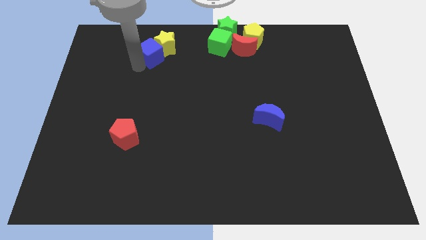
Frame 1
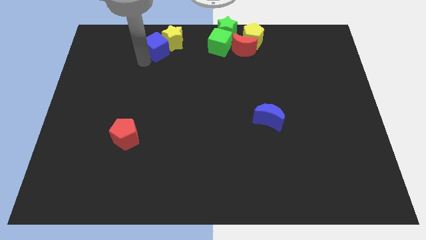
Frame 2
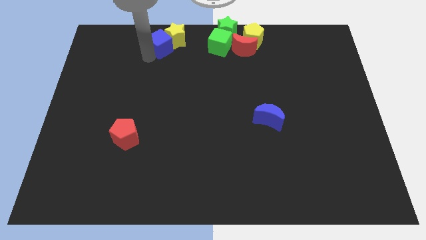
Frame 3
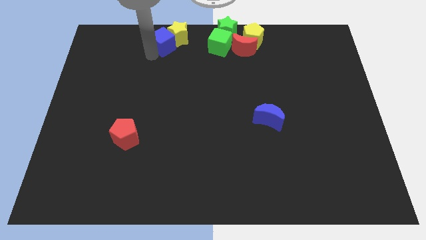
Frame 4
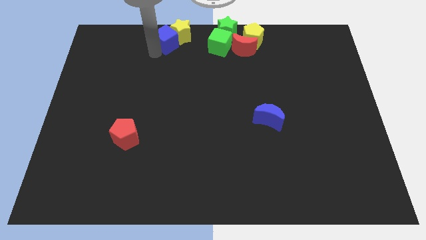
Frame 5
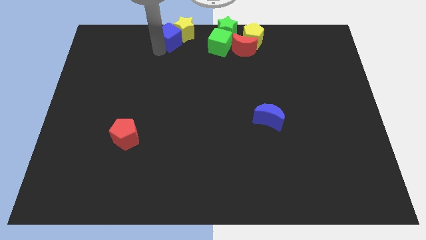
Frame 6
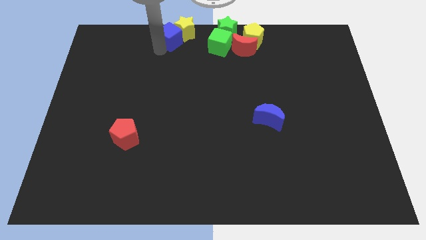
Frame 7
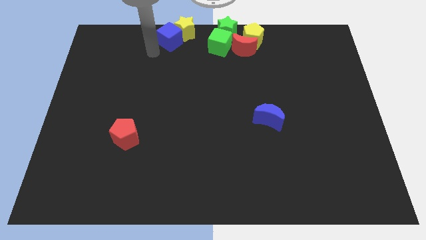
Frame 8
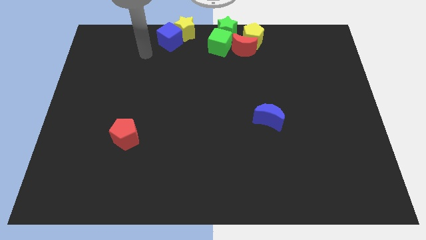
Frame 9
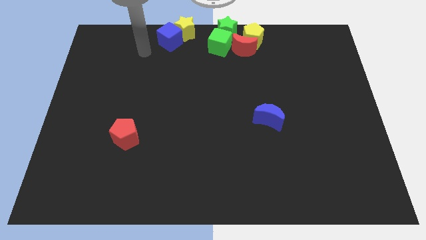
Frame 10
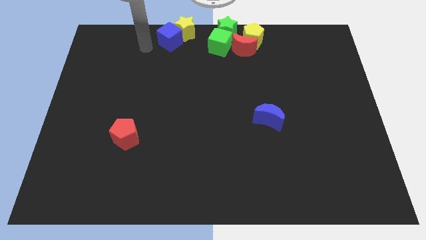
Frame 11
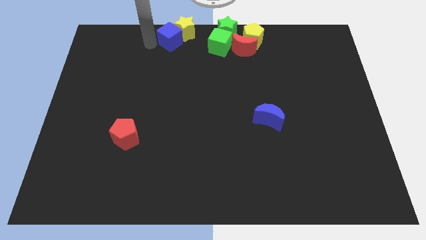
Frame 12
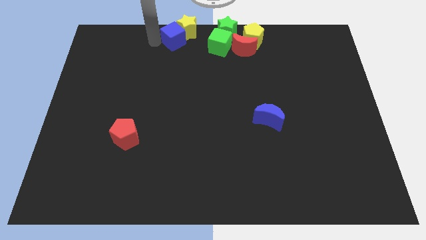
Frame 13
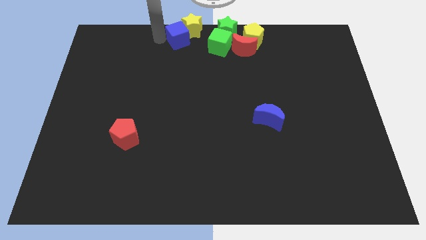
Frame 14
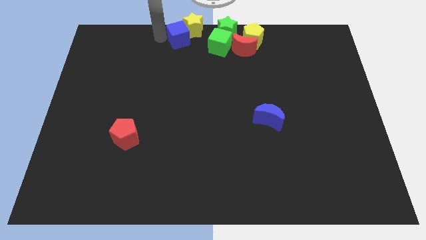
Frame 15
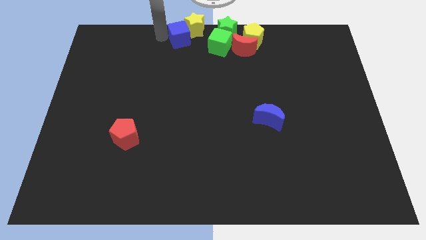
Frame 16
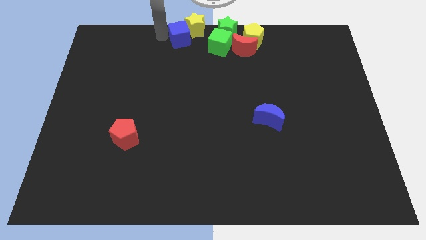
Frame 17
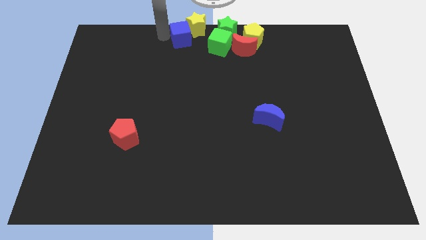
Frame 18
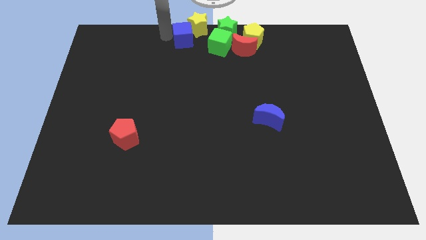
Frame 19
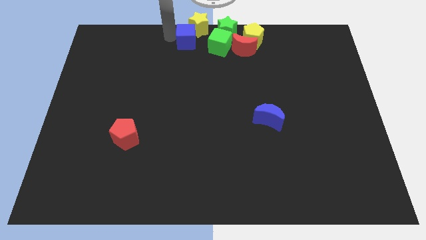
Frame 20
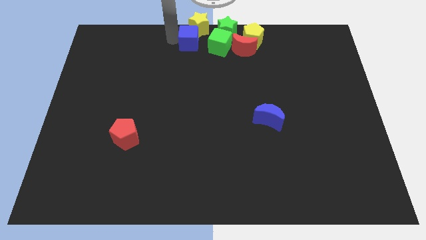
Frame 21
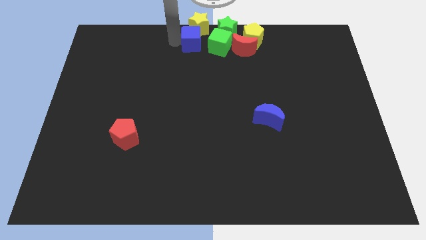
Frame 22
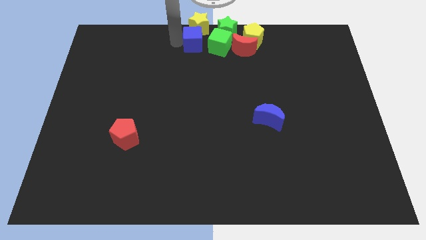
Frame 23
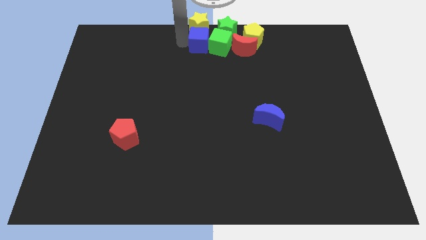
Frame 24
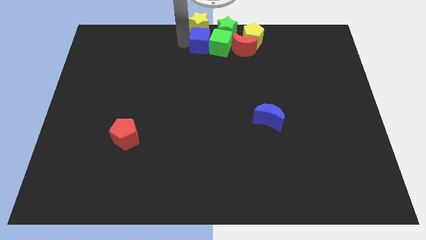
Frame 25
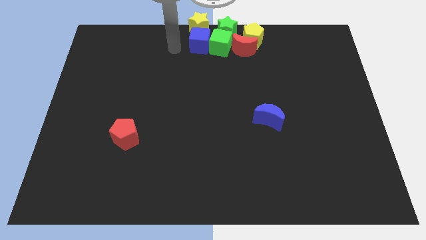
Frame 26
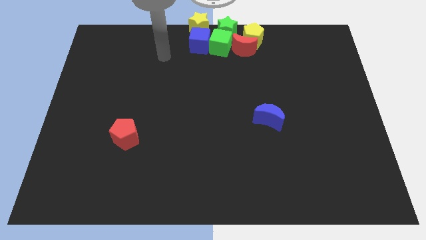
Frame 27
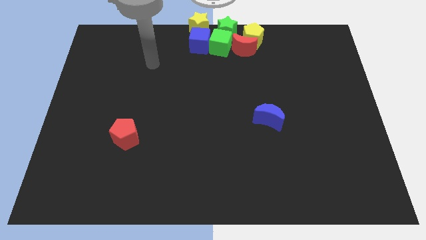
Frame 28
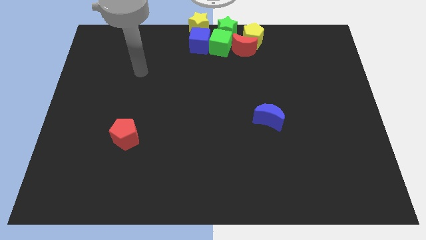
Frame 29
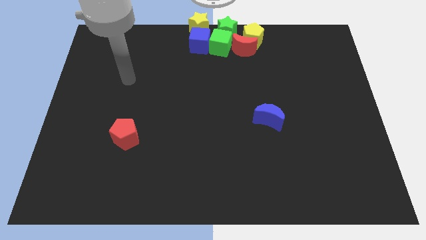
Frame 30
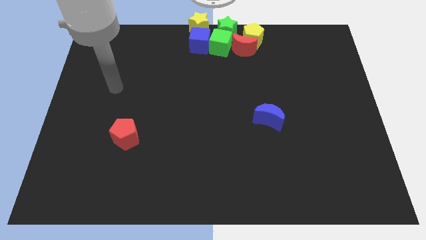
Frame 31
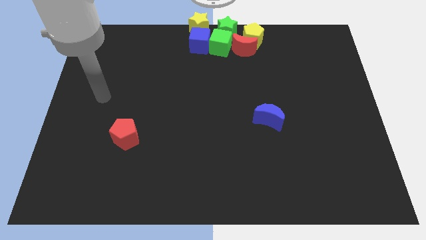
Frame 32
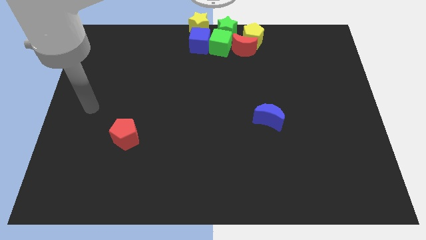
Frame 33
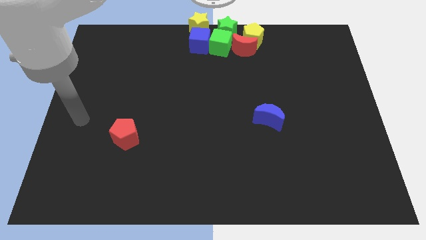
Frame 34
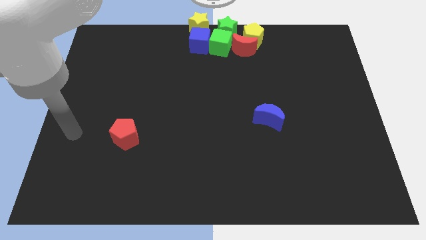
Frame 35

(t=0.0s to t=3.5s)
place blue cube to the left of green cube

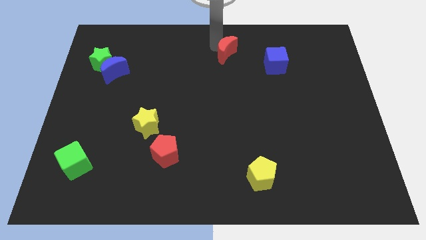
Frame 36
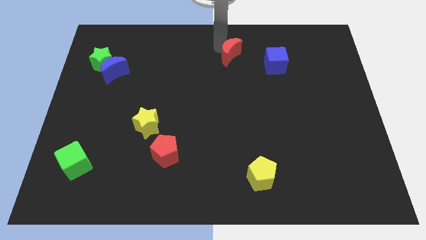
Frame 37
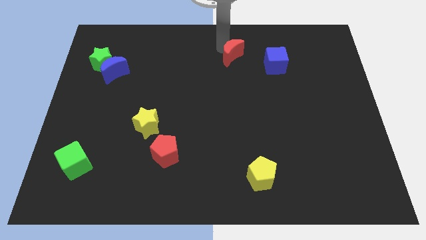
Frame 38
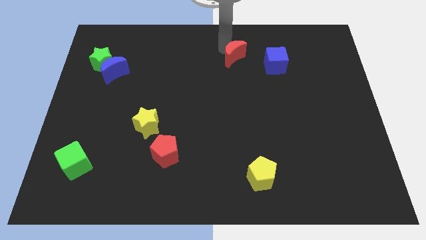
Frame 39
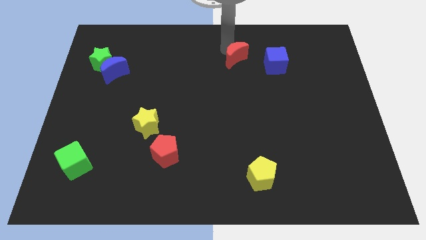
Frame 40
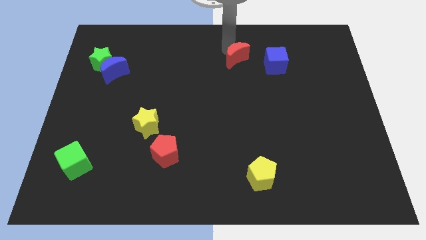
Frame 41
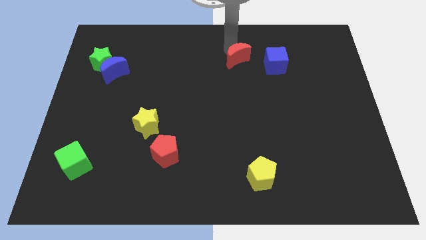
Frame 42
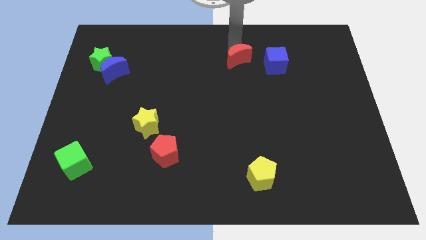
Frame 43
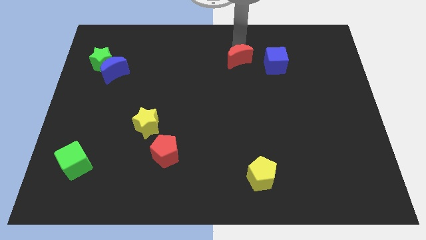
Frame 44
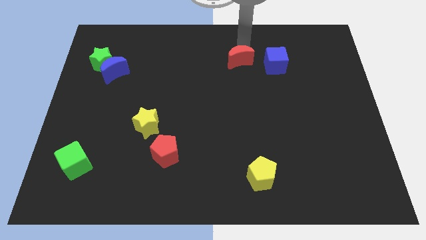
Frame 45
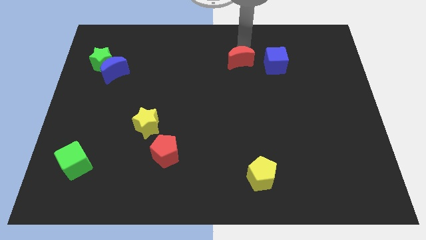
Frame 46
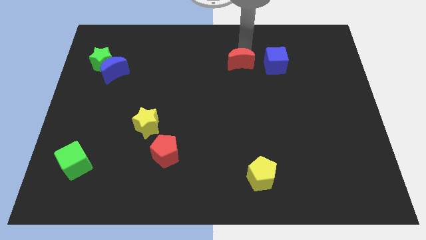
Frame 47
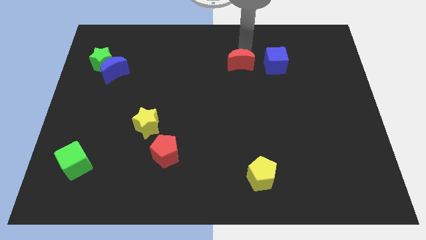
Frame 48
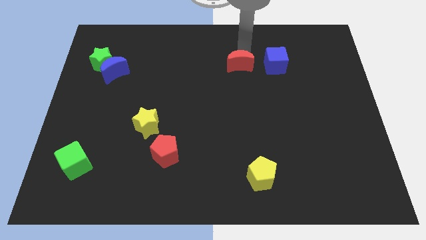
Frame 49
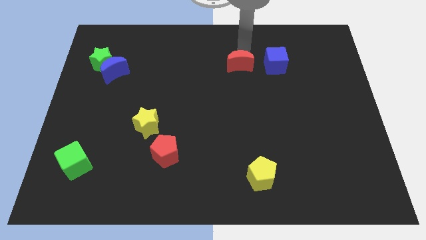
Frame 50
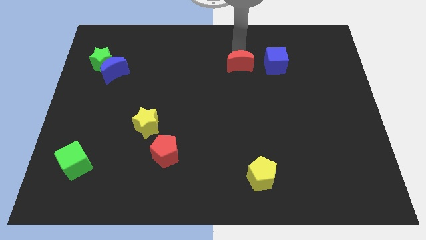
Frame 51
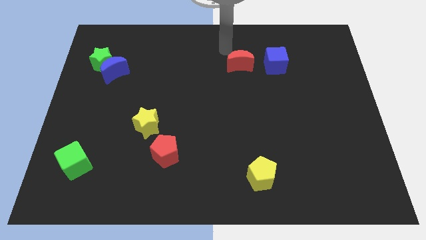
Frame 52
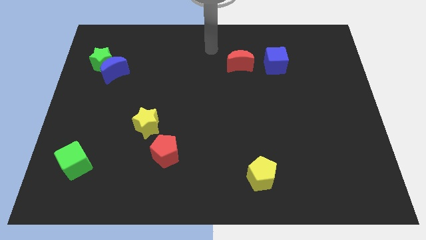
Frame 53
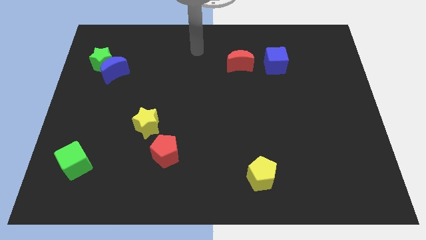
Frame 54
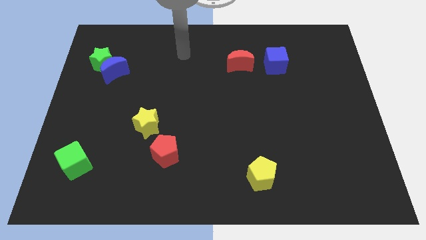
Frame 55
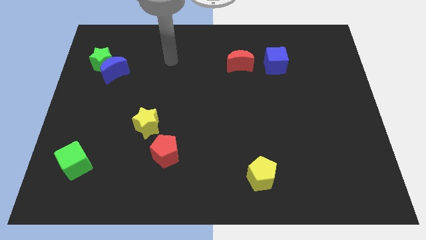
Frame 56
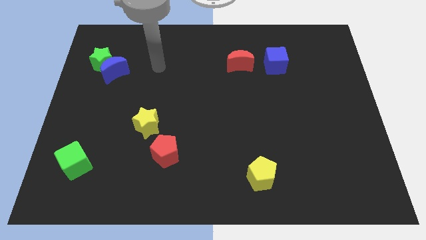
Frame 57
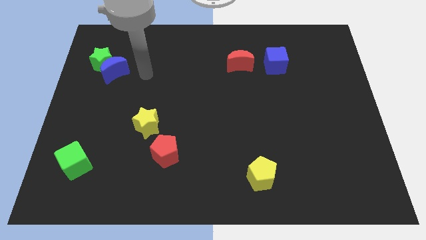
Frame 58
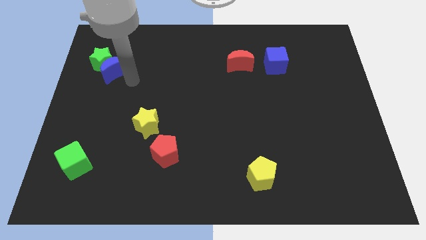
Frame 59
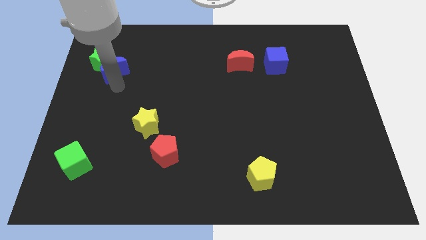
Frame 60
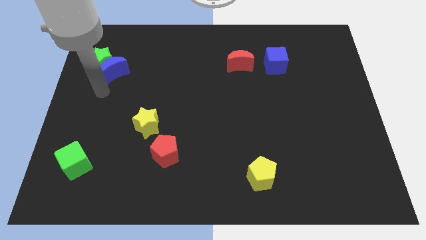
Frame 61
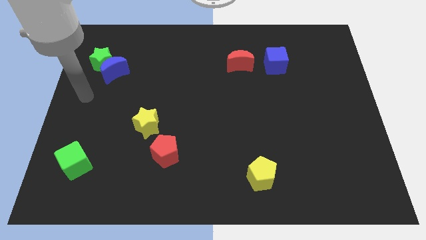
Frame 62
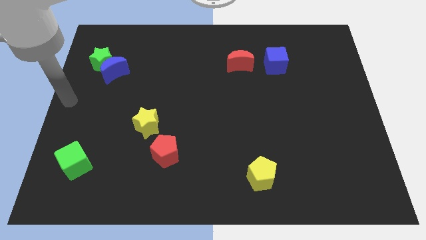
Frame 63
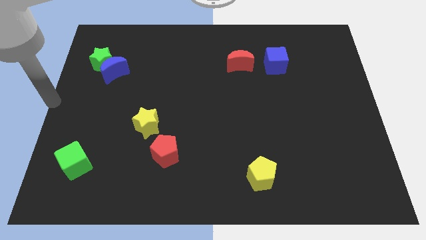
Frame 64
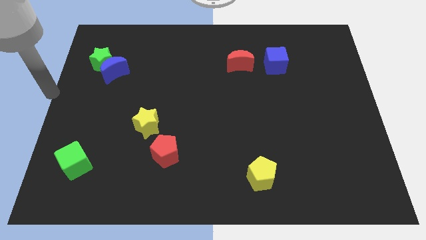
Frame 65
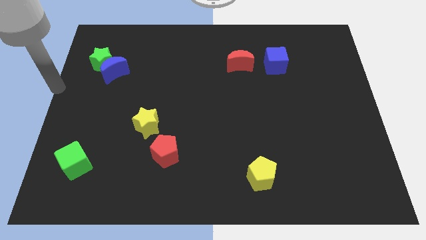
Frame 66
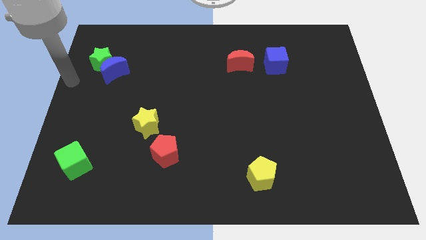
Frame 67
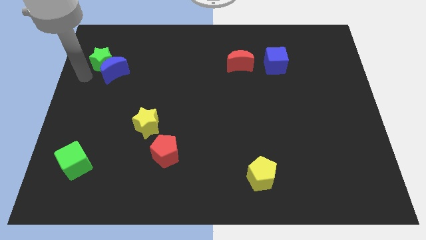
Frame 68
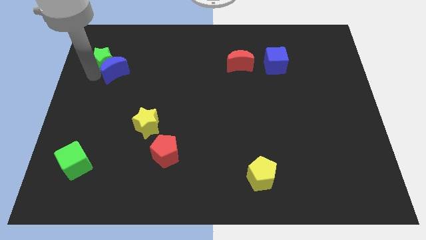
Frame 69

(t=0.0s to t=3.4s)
move the red crescent to the left of the blue cube

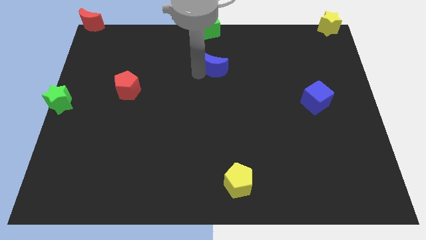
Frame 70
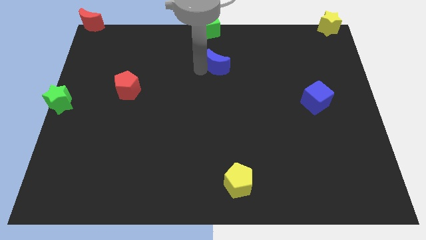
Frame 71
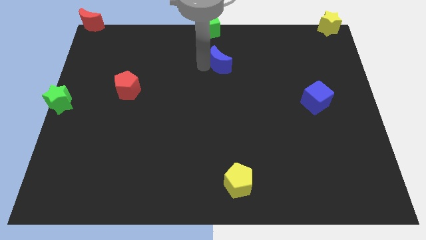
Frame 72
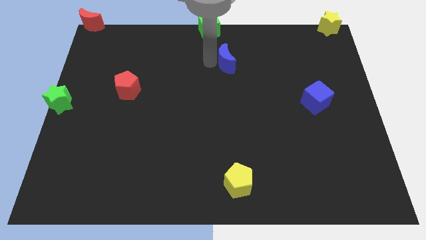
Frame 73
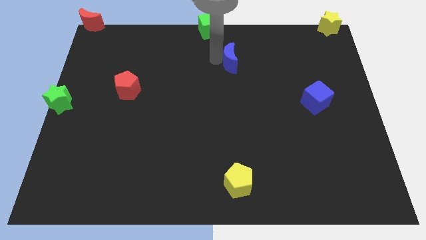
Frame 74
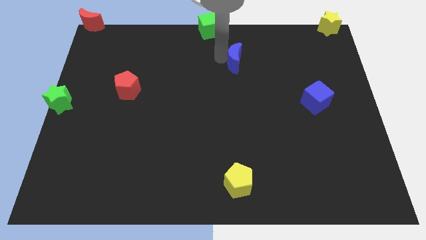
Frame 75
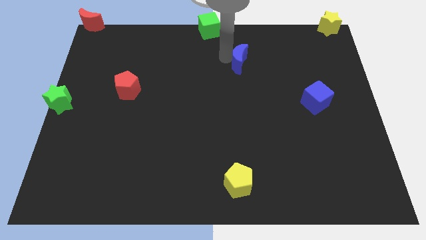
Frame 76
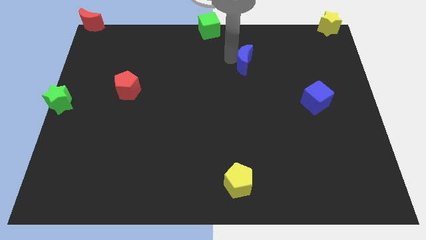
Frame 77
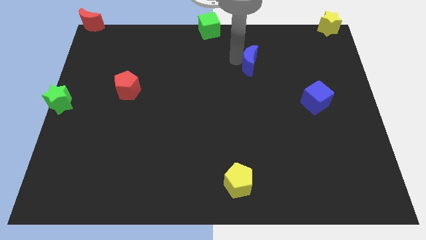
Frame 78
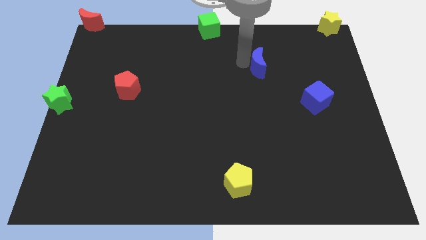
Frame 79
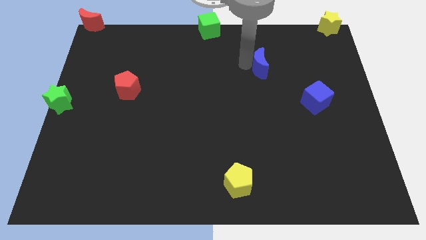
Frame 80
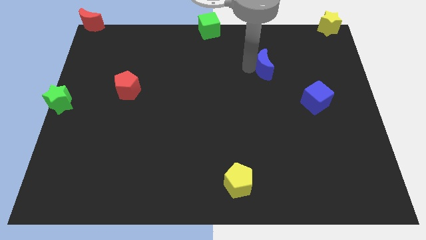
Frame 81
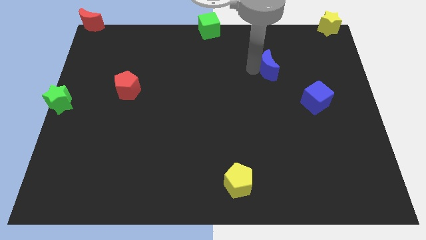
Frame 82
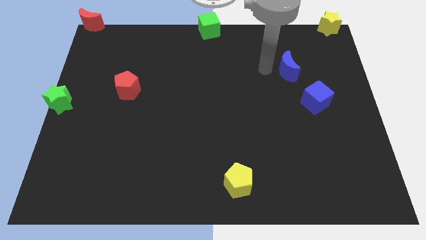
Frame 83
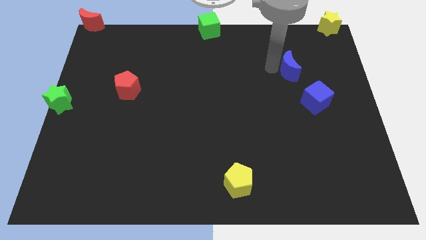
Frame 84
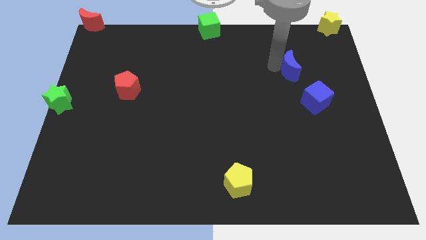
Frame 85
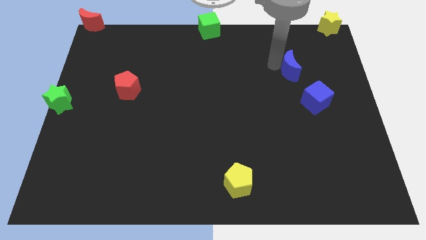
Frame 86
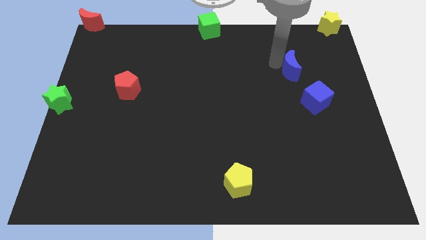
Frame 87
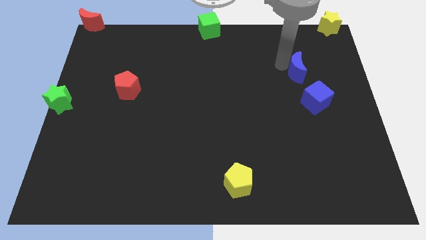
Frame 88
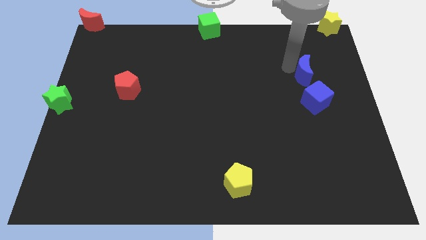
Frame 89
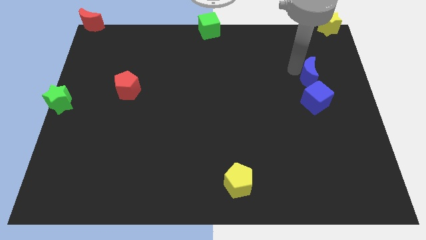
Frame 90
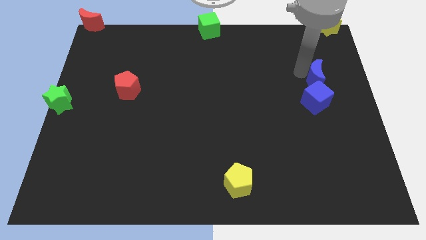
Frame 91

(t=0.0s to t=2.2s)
push the blue crescent to the top of the blue cube
